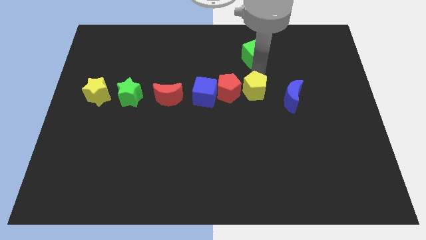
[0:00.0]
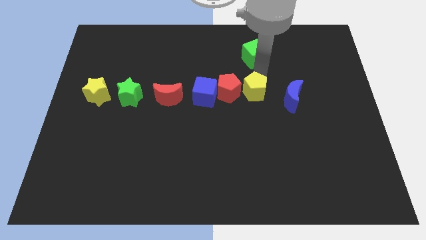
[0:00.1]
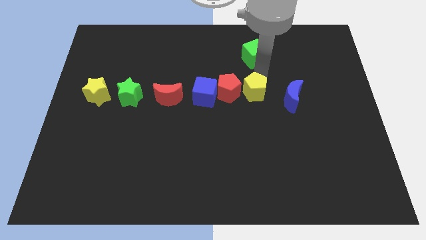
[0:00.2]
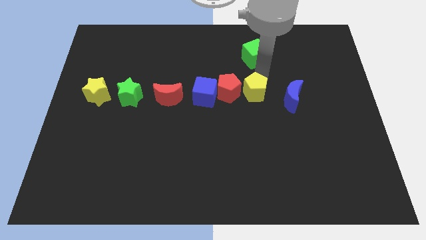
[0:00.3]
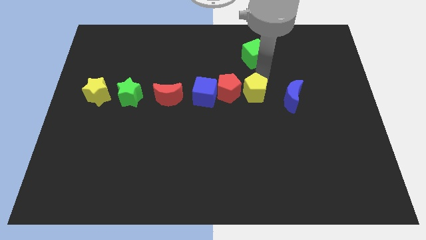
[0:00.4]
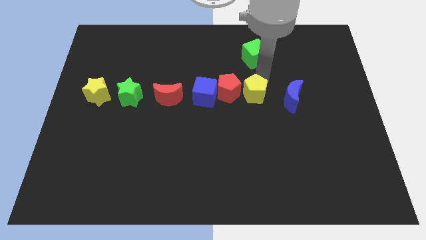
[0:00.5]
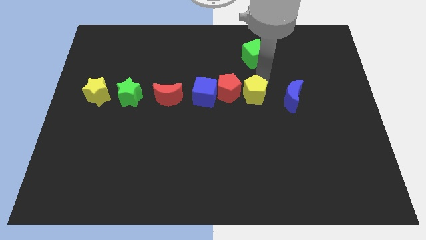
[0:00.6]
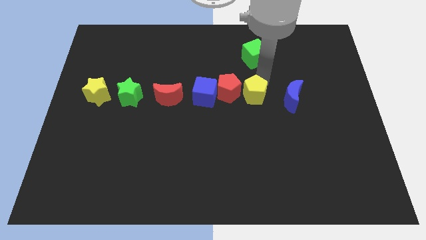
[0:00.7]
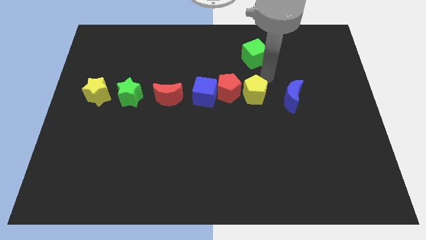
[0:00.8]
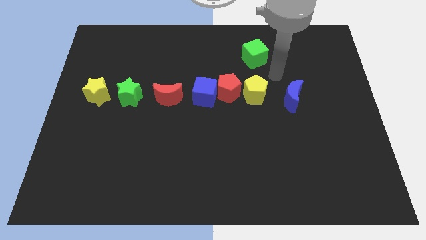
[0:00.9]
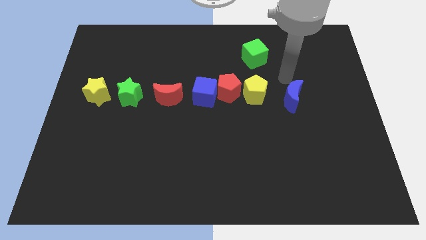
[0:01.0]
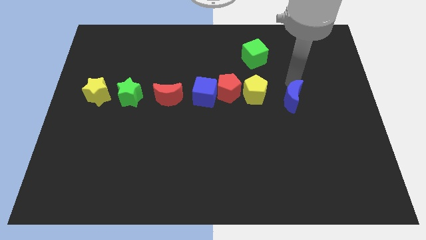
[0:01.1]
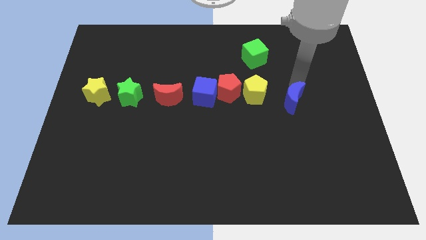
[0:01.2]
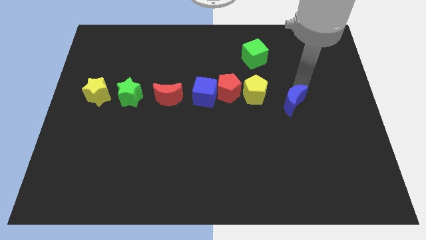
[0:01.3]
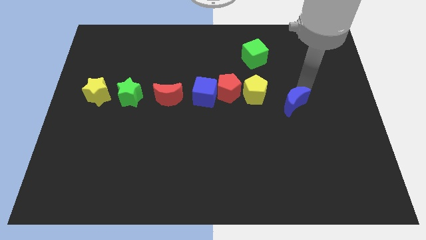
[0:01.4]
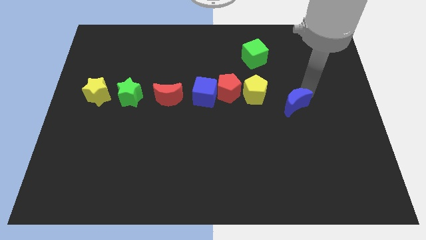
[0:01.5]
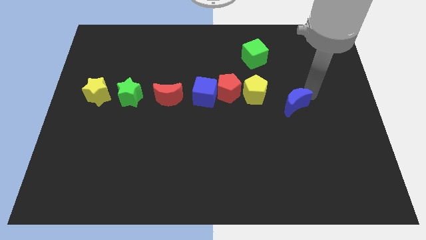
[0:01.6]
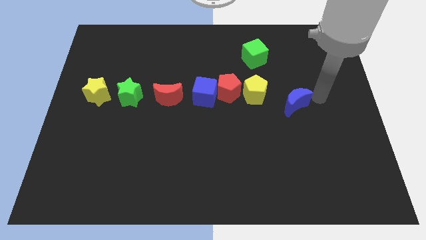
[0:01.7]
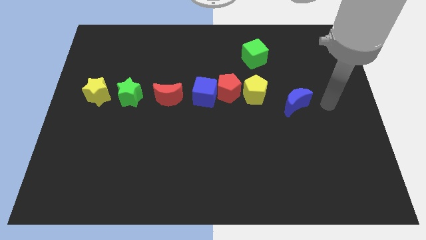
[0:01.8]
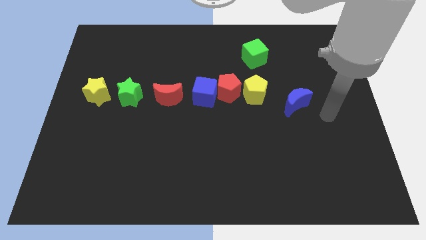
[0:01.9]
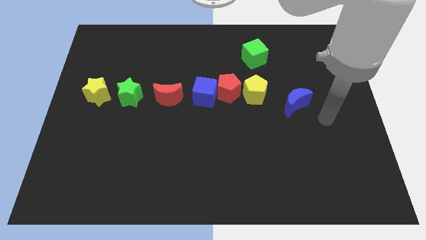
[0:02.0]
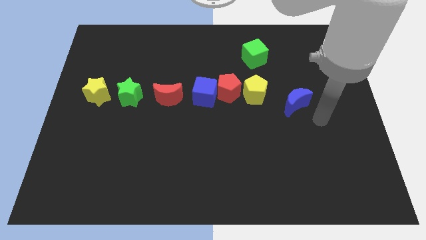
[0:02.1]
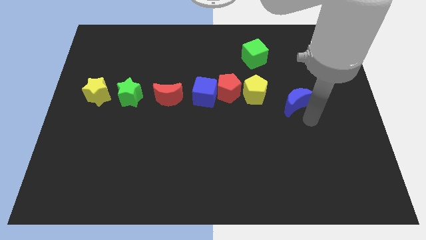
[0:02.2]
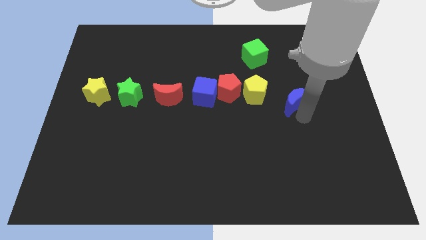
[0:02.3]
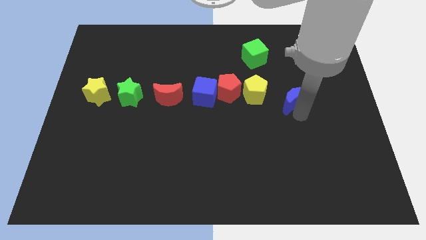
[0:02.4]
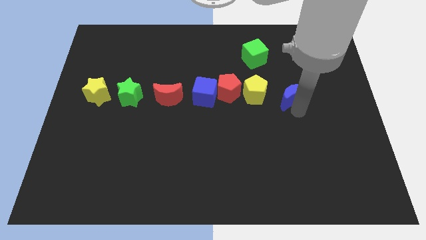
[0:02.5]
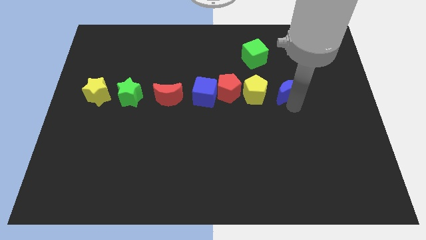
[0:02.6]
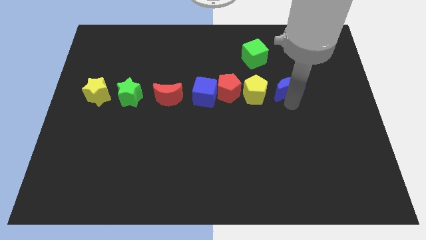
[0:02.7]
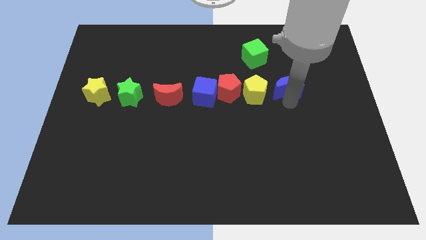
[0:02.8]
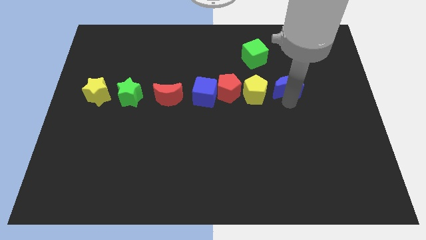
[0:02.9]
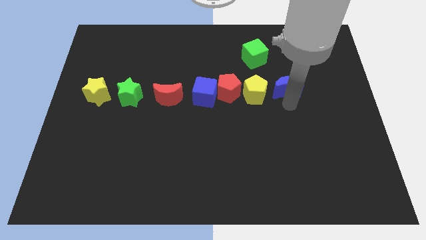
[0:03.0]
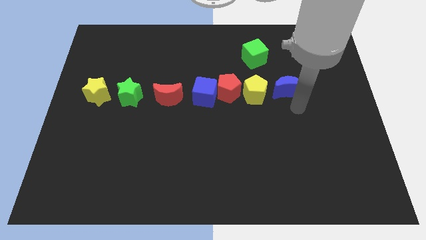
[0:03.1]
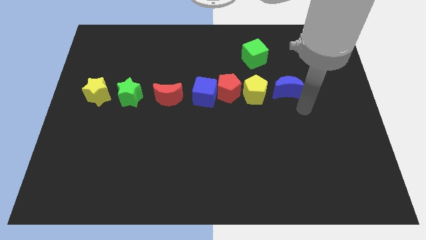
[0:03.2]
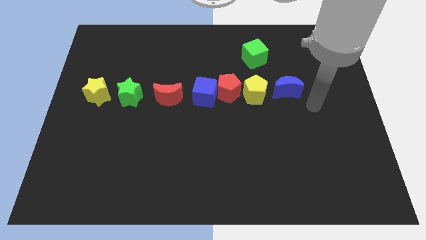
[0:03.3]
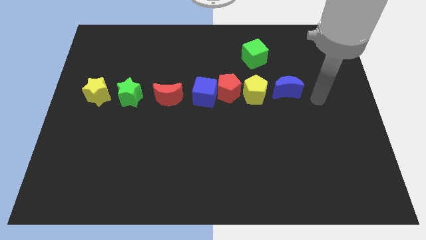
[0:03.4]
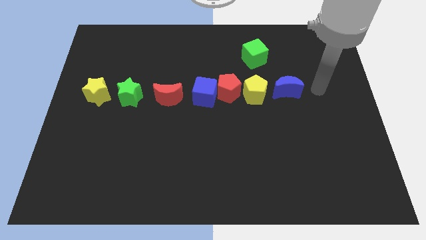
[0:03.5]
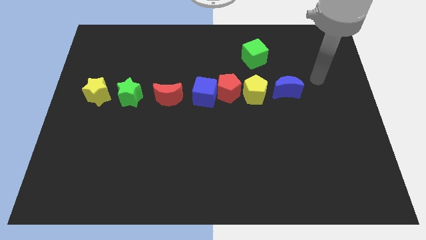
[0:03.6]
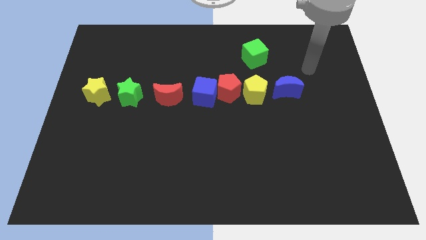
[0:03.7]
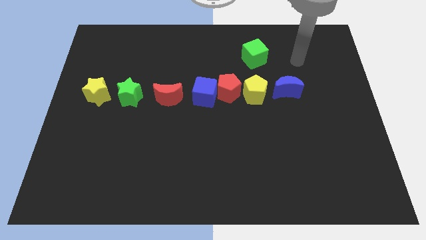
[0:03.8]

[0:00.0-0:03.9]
push yellow pentagon and blue moon parallel to each other

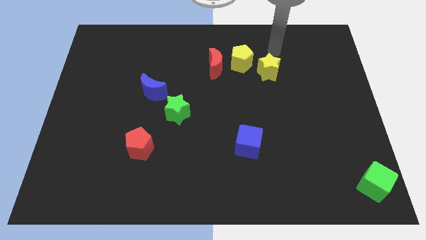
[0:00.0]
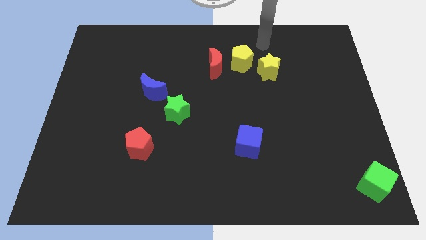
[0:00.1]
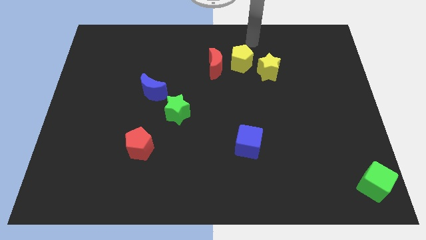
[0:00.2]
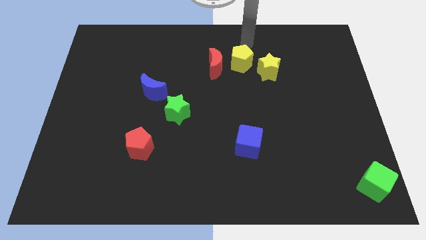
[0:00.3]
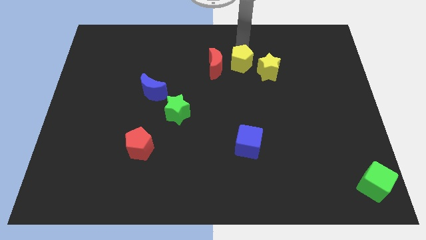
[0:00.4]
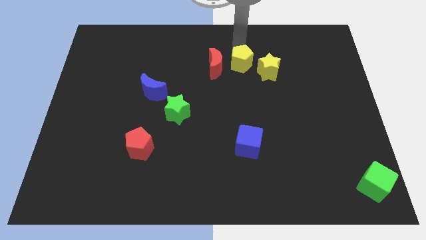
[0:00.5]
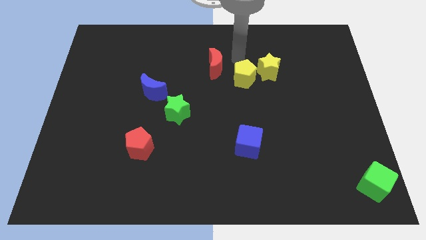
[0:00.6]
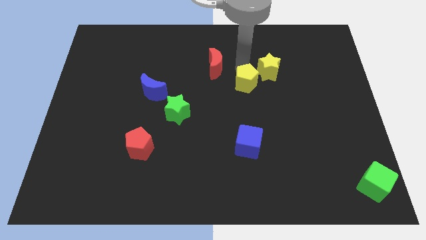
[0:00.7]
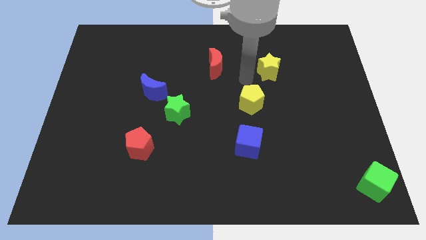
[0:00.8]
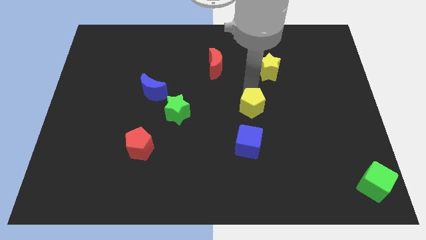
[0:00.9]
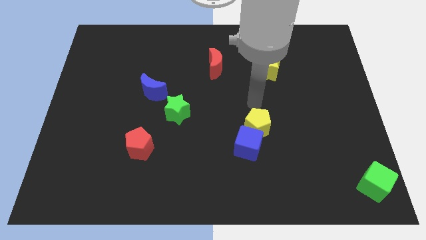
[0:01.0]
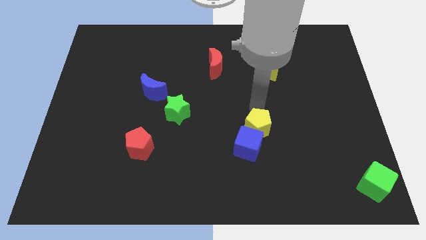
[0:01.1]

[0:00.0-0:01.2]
slide the yellow pentagon into the blue cube

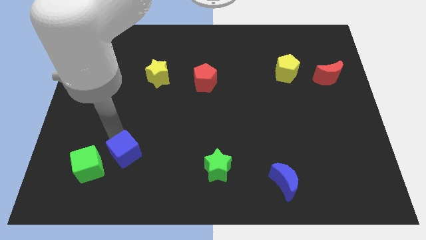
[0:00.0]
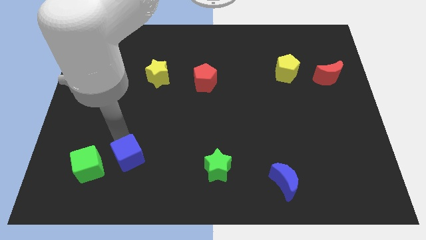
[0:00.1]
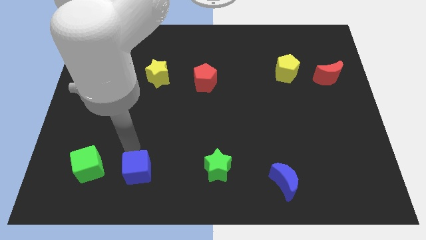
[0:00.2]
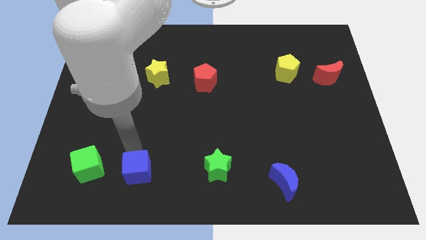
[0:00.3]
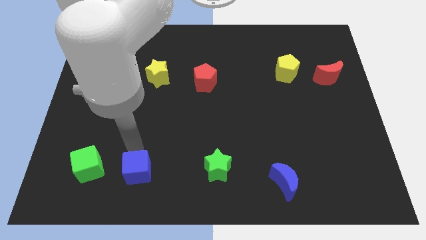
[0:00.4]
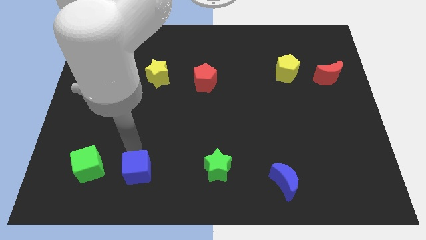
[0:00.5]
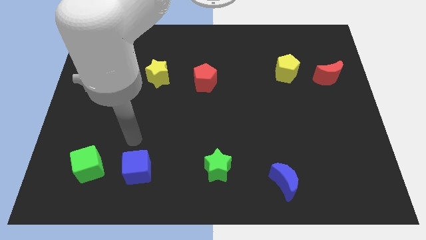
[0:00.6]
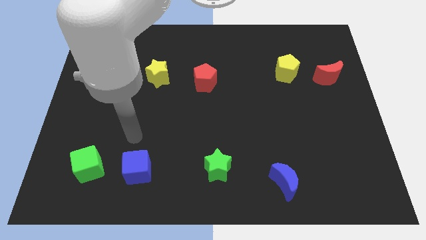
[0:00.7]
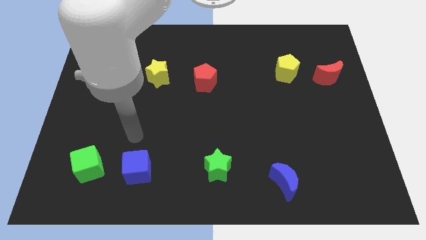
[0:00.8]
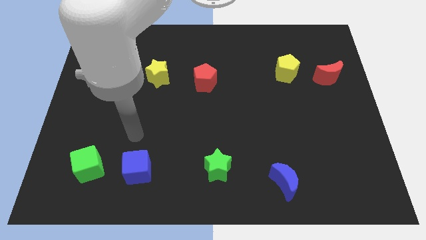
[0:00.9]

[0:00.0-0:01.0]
place the blue cube in between the blue blocks

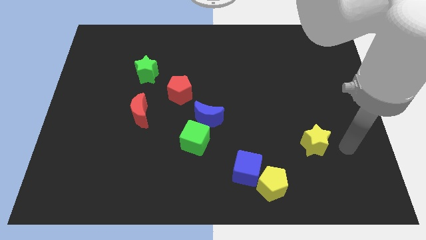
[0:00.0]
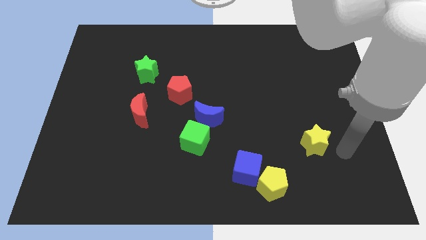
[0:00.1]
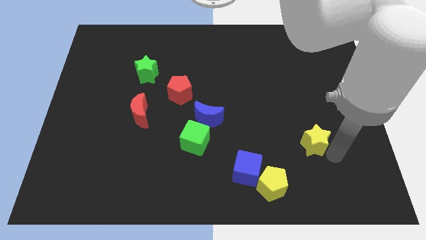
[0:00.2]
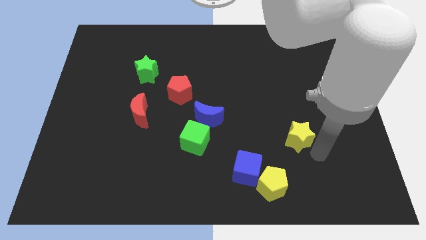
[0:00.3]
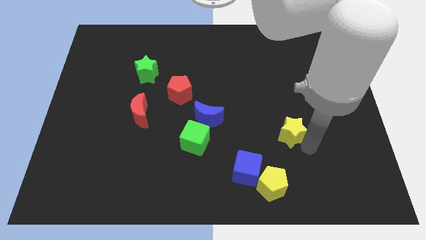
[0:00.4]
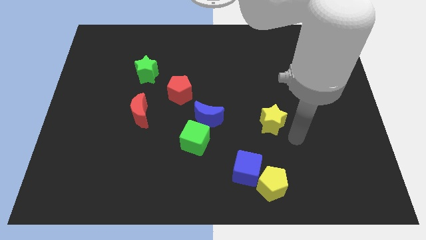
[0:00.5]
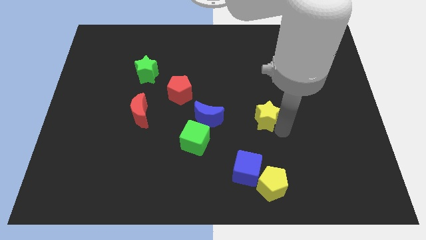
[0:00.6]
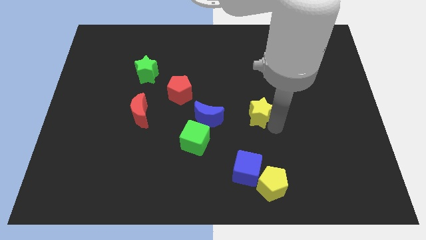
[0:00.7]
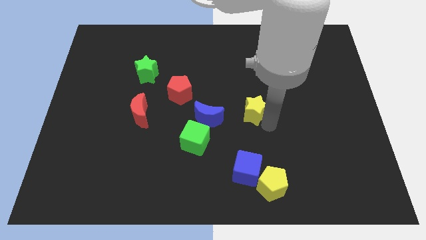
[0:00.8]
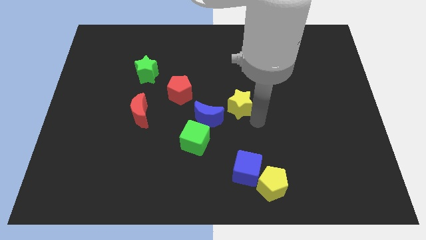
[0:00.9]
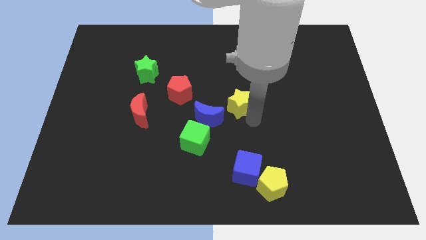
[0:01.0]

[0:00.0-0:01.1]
move the yellow star close to the blue crescent

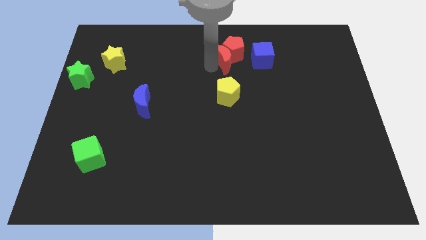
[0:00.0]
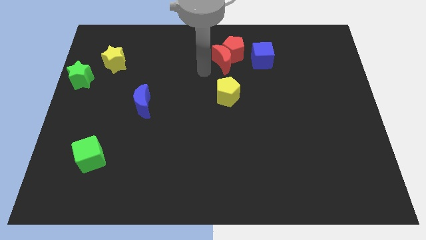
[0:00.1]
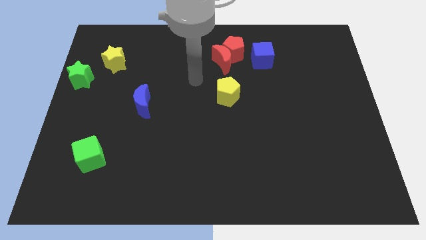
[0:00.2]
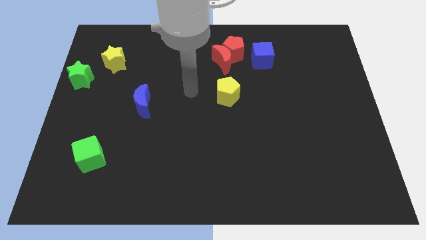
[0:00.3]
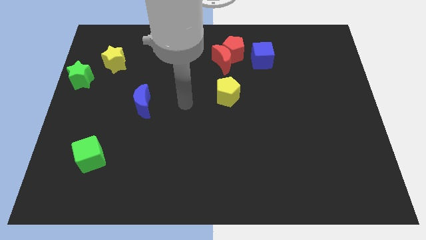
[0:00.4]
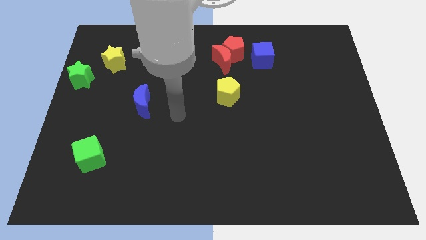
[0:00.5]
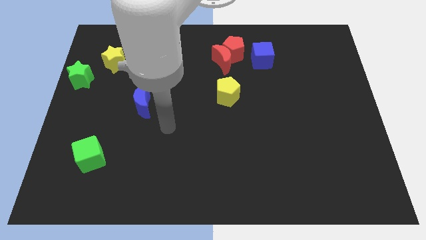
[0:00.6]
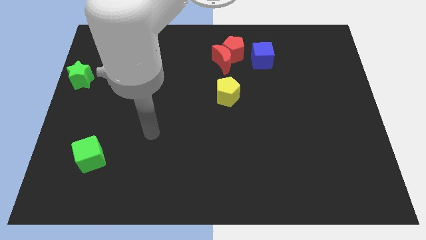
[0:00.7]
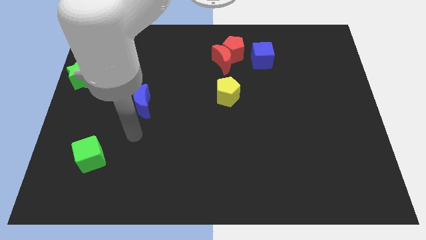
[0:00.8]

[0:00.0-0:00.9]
move your arm to the bottom of the blue crescent

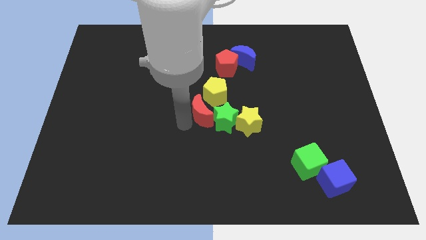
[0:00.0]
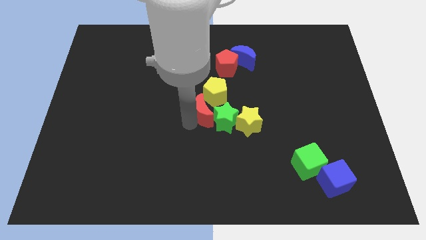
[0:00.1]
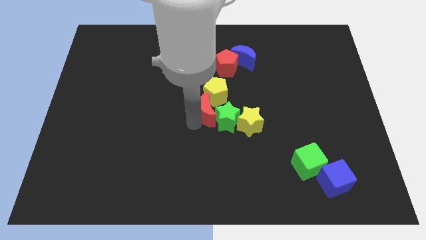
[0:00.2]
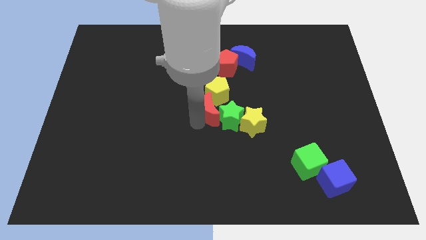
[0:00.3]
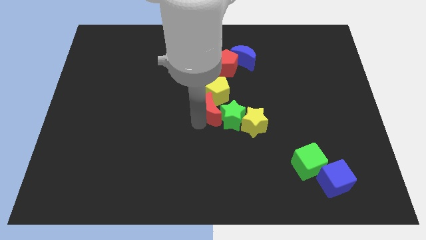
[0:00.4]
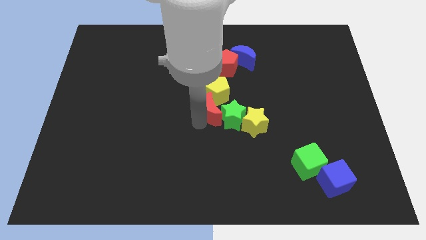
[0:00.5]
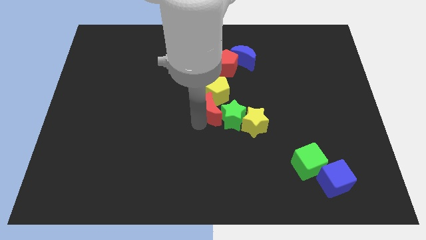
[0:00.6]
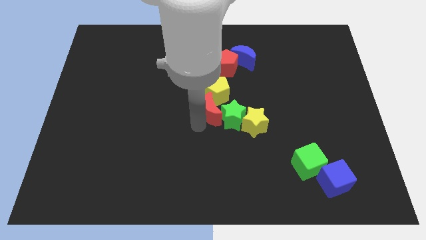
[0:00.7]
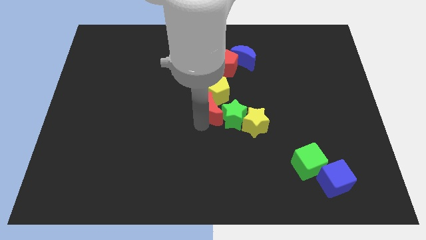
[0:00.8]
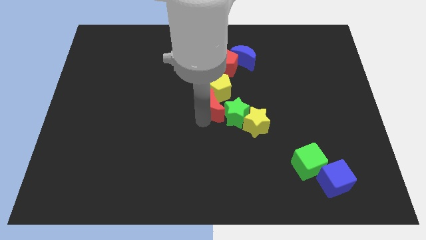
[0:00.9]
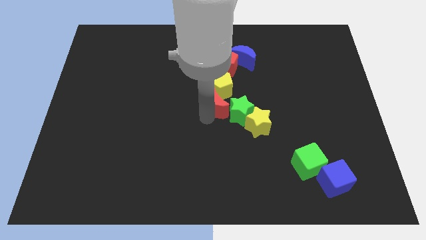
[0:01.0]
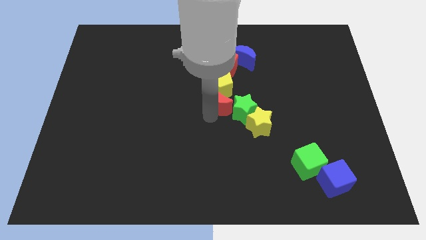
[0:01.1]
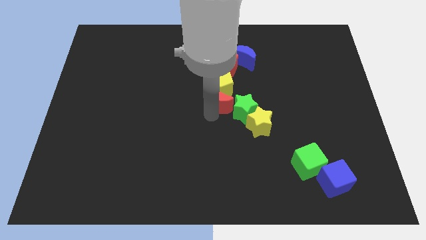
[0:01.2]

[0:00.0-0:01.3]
push red crescent into yellow pentagon
